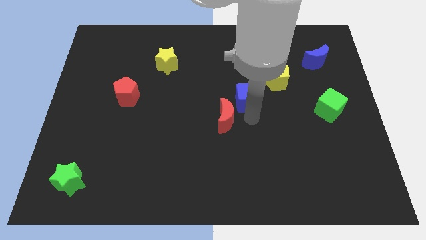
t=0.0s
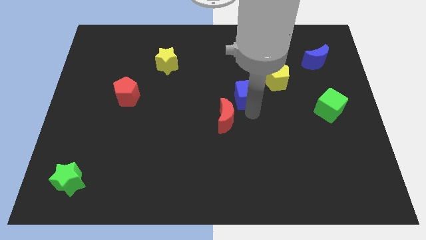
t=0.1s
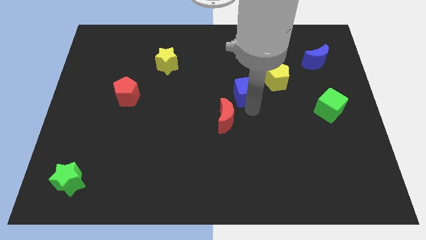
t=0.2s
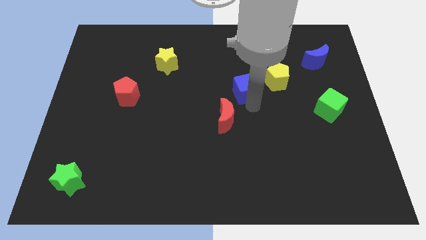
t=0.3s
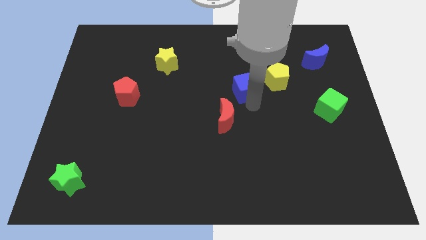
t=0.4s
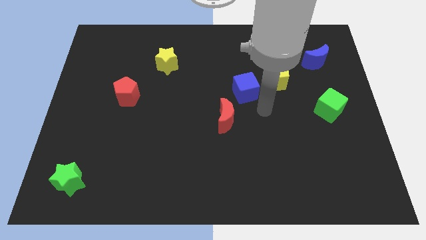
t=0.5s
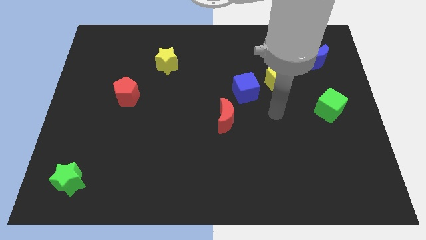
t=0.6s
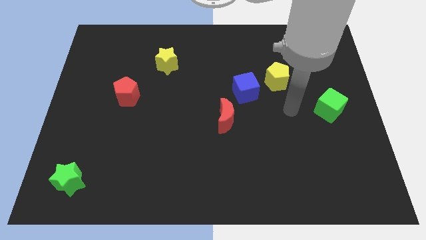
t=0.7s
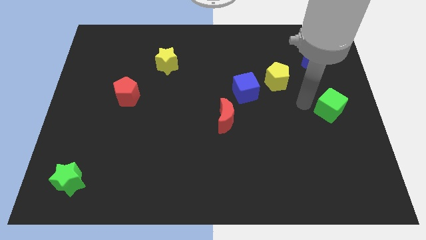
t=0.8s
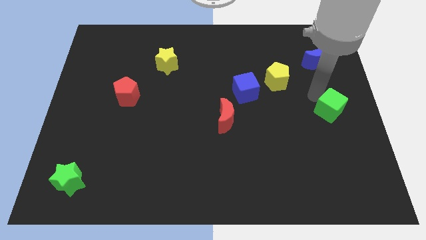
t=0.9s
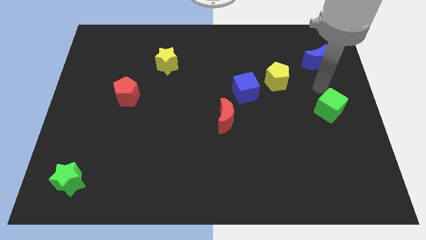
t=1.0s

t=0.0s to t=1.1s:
move blue cubed left beside yellow pentagon

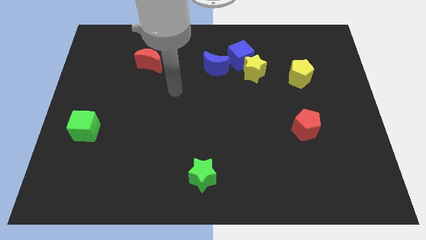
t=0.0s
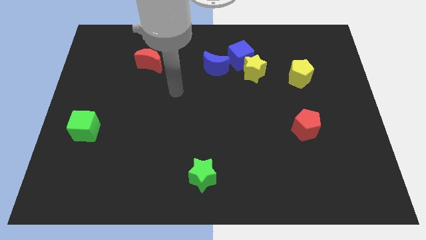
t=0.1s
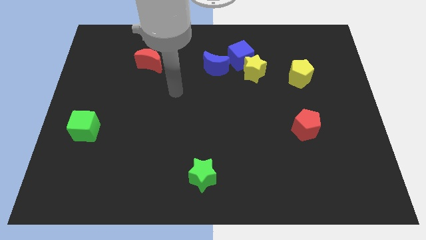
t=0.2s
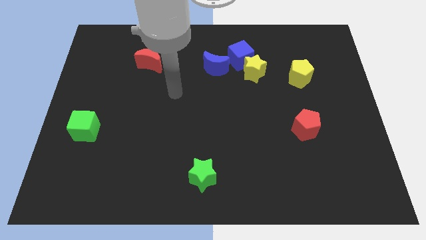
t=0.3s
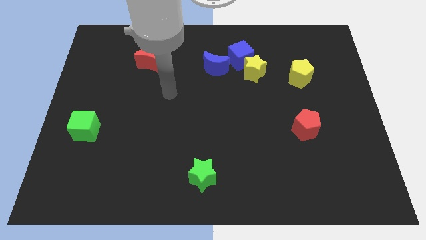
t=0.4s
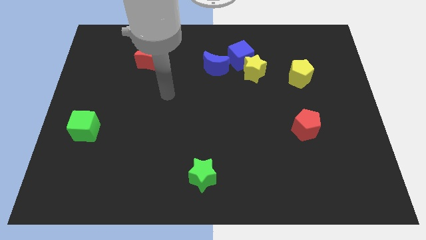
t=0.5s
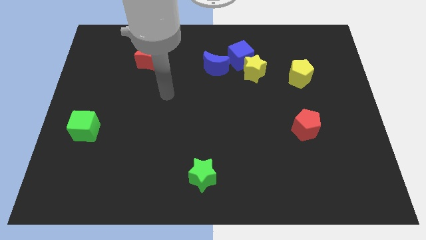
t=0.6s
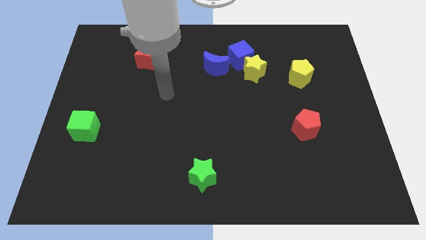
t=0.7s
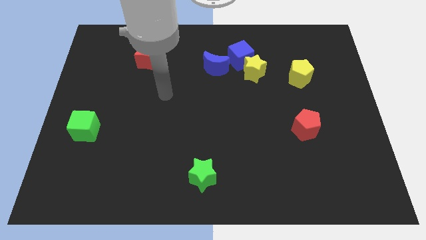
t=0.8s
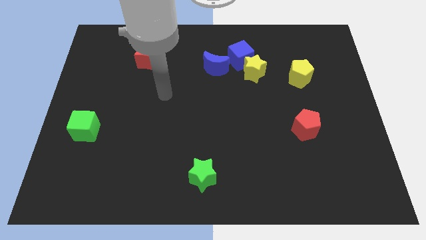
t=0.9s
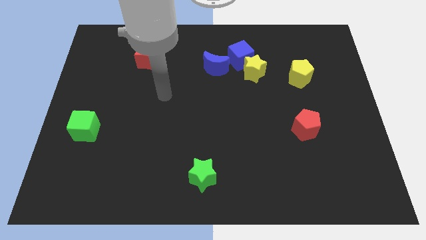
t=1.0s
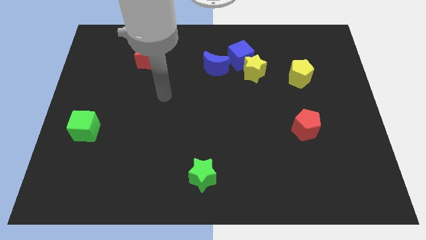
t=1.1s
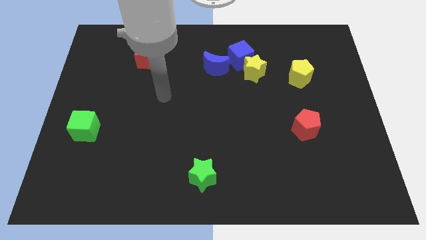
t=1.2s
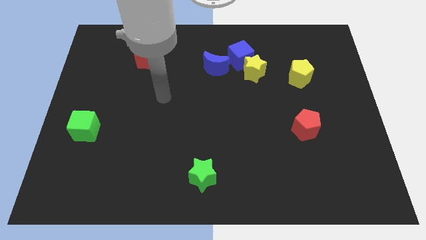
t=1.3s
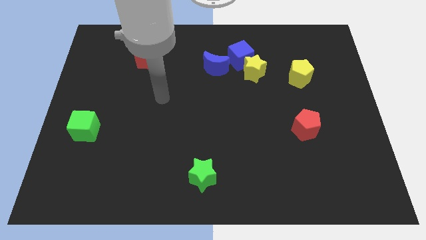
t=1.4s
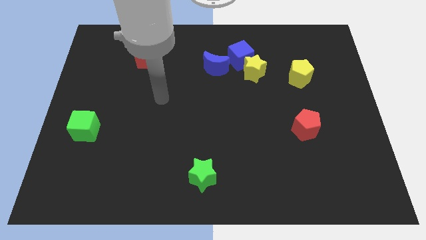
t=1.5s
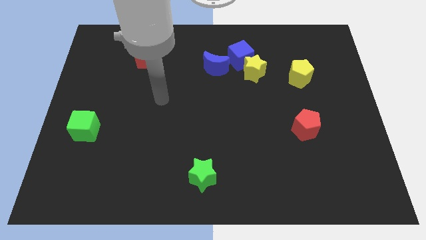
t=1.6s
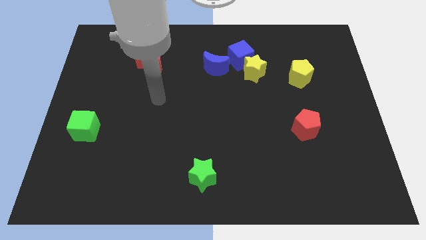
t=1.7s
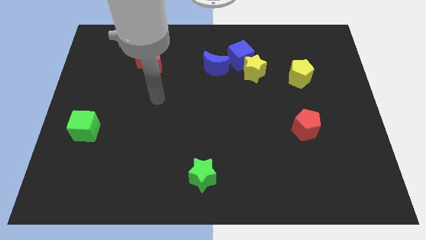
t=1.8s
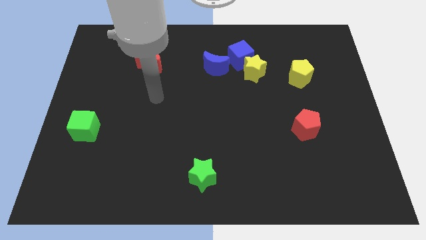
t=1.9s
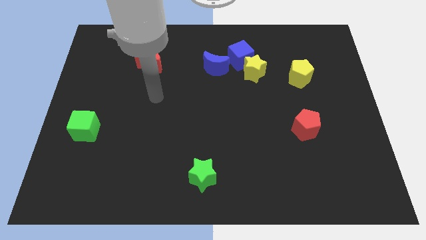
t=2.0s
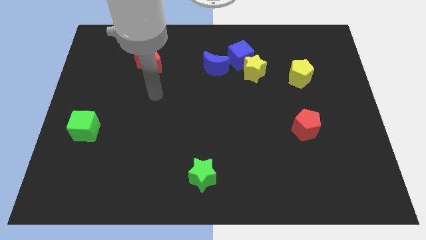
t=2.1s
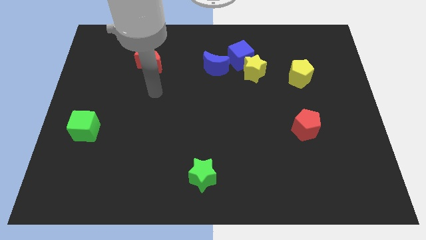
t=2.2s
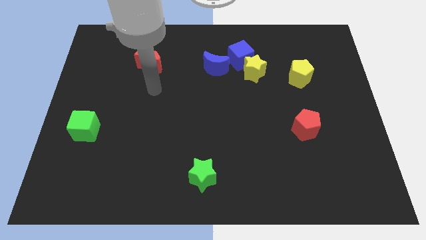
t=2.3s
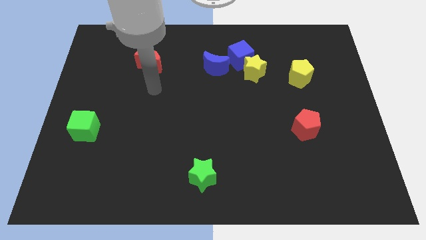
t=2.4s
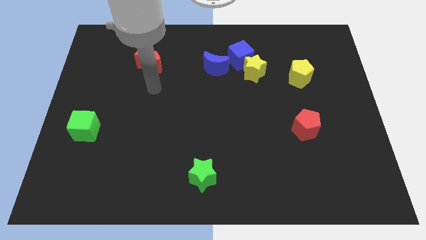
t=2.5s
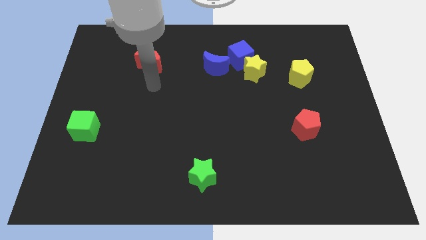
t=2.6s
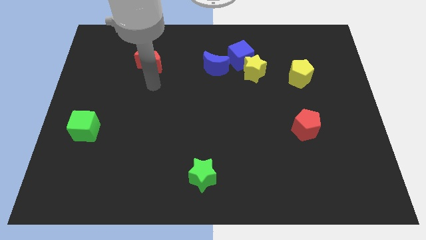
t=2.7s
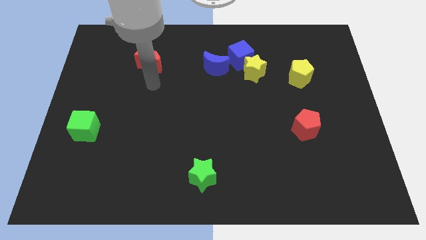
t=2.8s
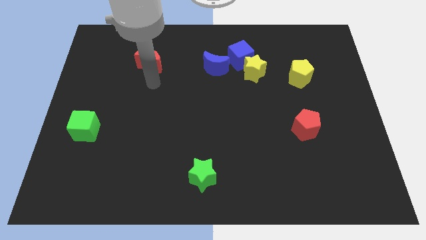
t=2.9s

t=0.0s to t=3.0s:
place arm at the bottom of red moon

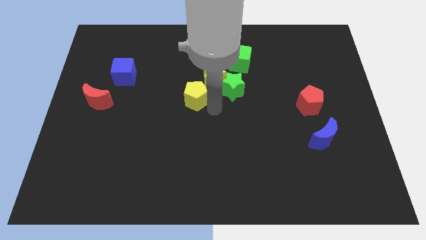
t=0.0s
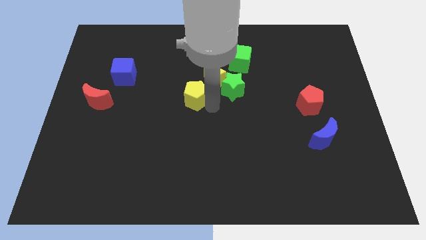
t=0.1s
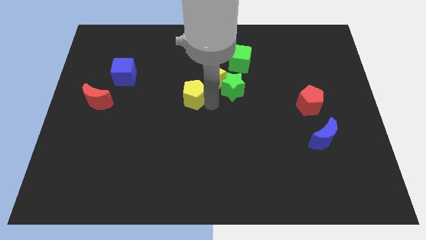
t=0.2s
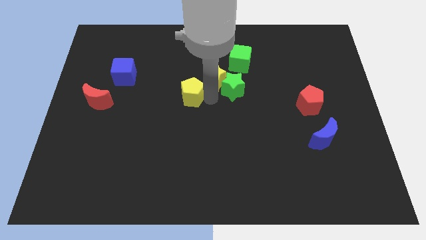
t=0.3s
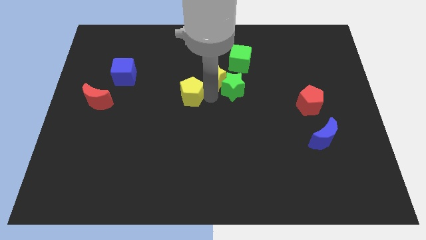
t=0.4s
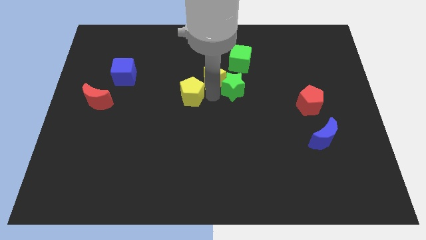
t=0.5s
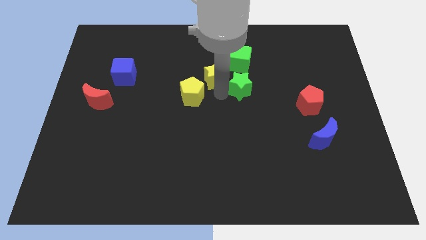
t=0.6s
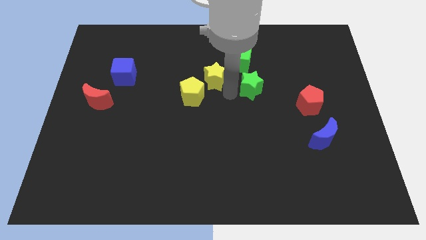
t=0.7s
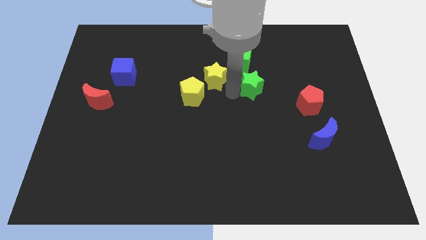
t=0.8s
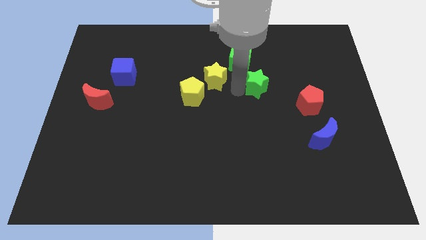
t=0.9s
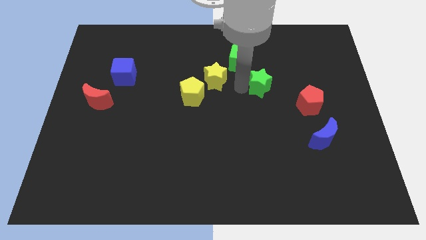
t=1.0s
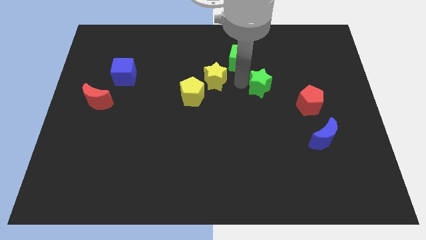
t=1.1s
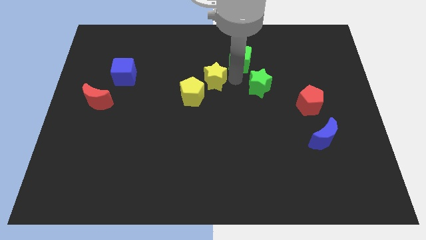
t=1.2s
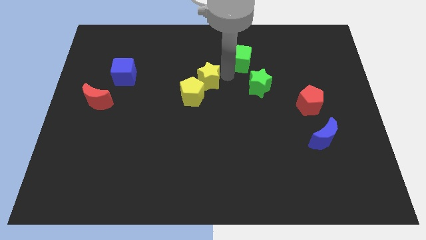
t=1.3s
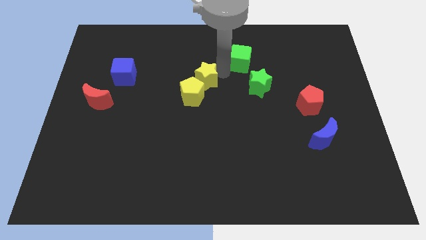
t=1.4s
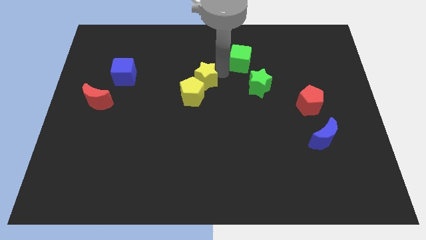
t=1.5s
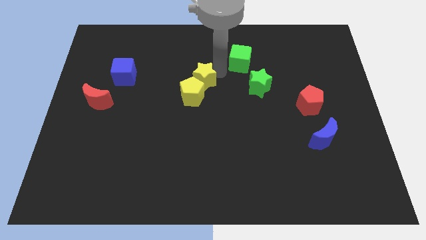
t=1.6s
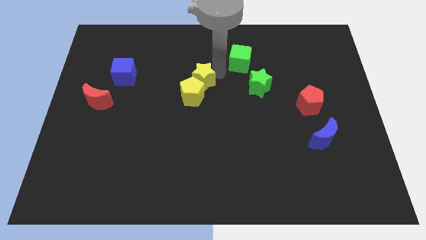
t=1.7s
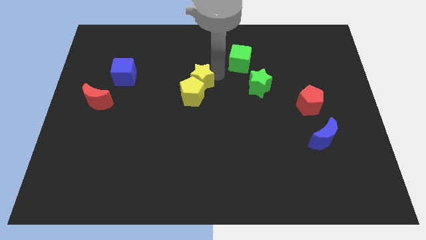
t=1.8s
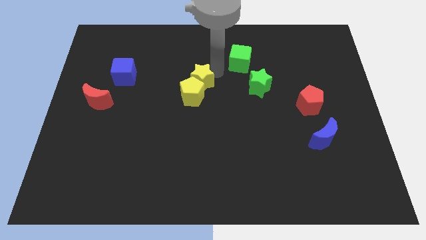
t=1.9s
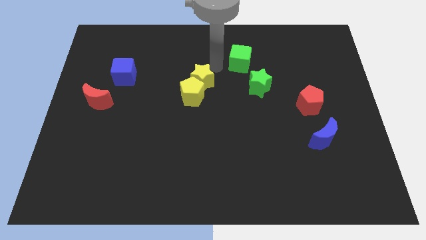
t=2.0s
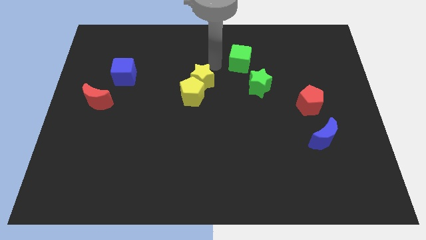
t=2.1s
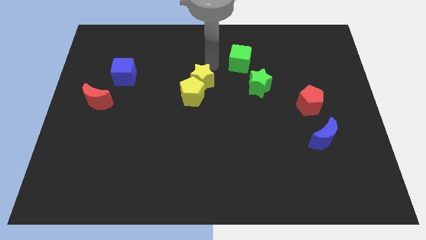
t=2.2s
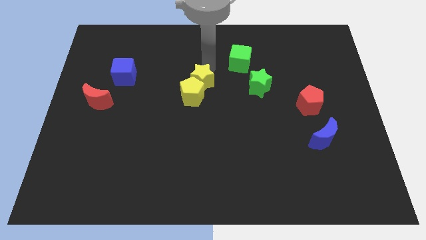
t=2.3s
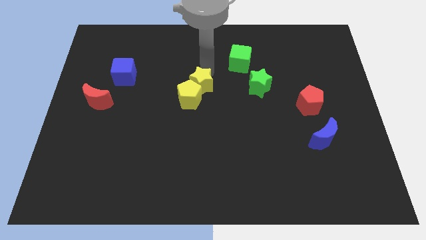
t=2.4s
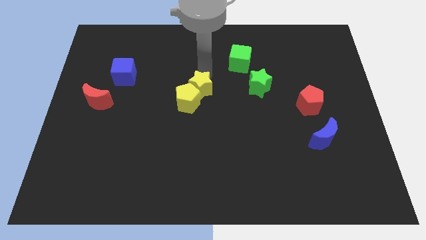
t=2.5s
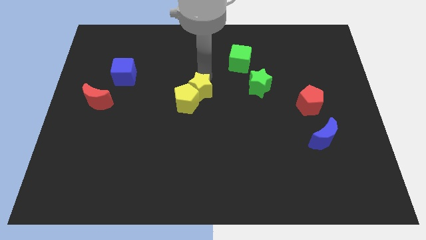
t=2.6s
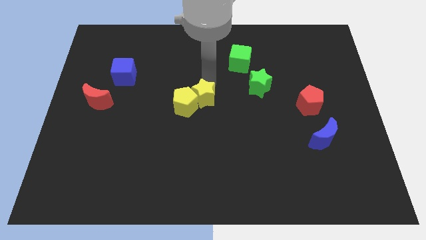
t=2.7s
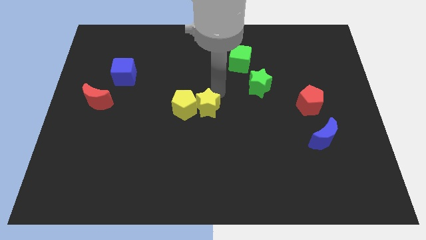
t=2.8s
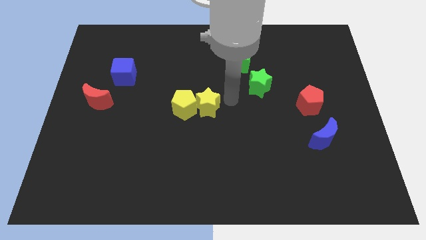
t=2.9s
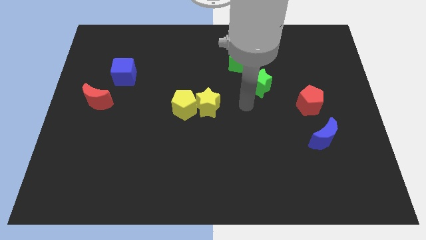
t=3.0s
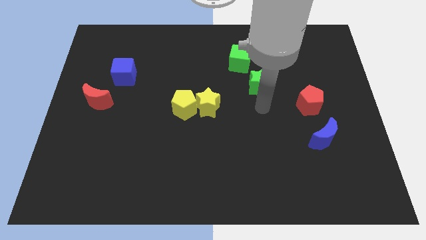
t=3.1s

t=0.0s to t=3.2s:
separate the green star and yellow star by placing the yellow star at the right side of the yellow pentagon

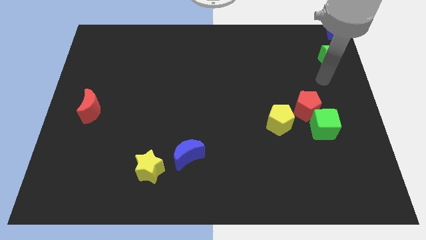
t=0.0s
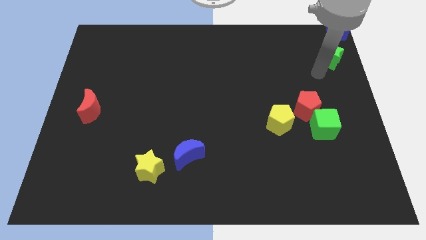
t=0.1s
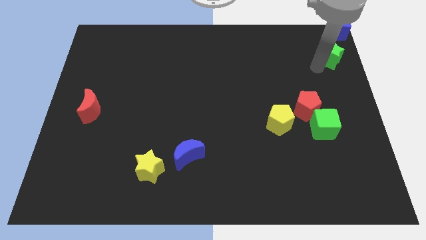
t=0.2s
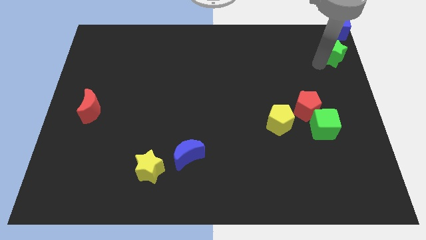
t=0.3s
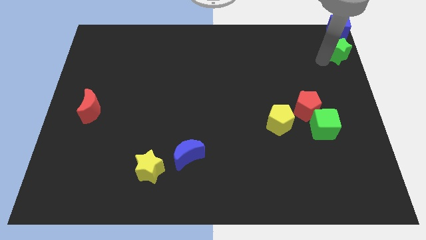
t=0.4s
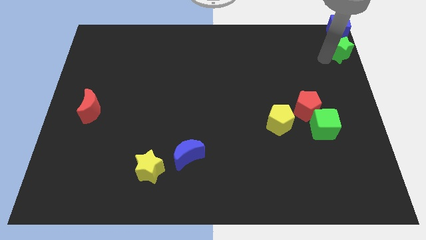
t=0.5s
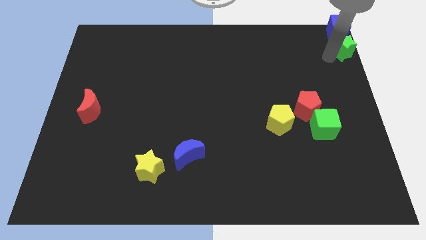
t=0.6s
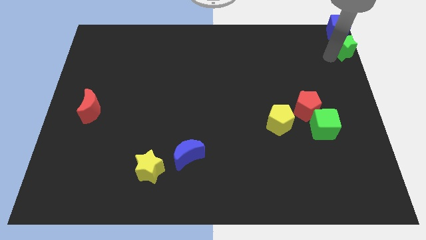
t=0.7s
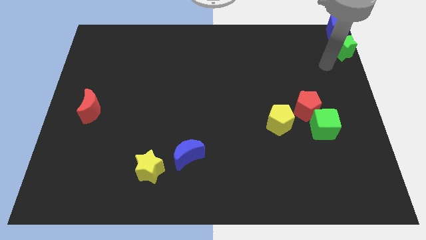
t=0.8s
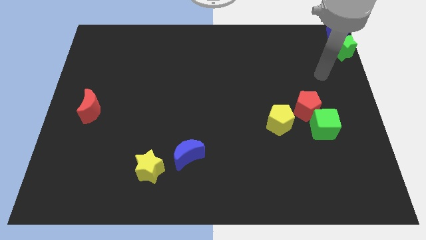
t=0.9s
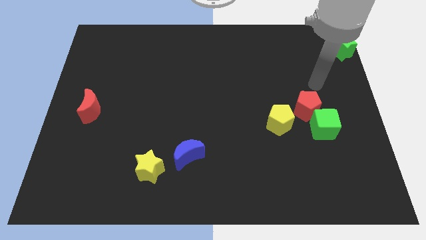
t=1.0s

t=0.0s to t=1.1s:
slide the green star to the bottom of the blue cube

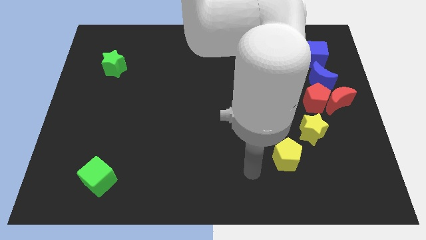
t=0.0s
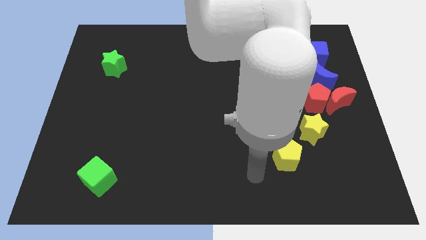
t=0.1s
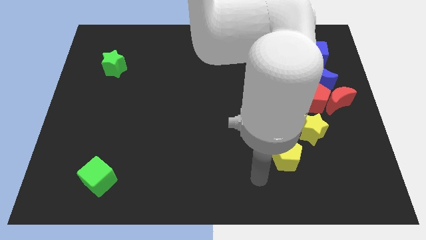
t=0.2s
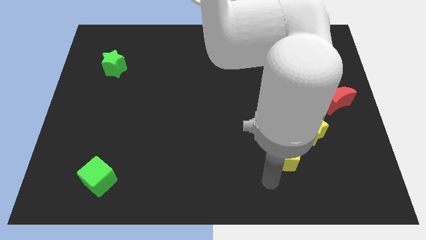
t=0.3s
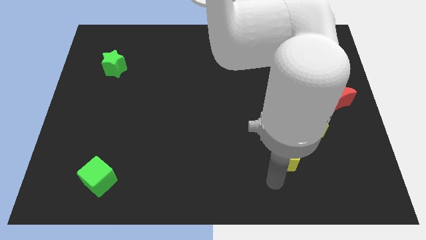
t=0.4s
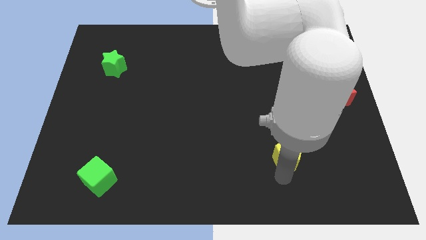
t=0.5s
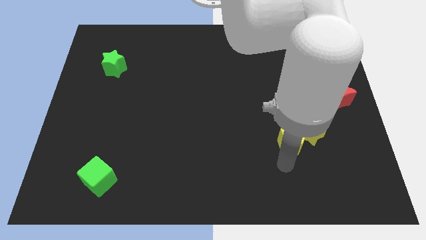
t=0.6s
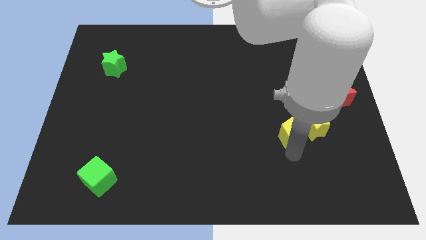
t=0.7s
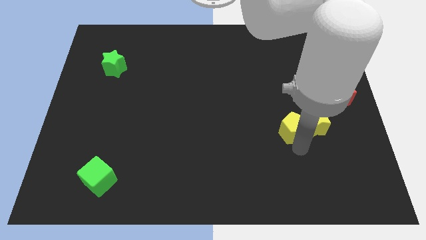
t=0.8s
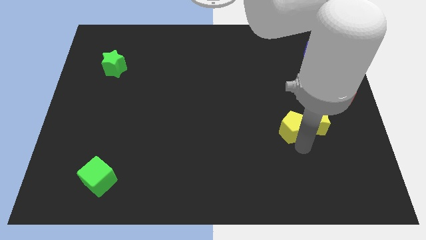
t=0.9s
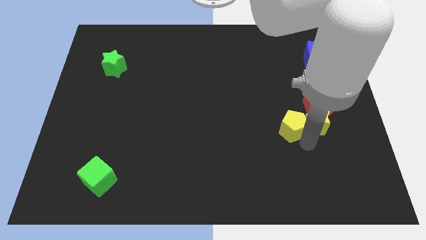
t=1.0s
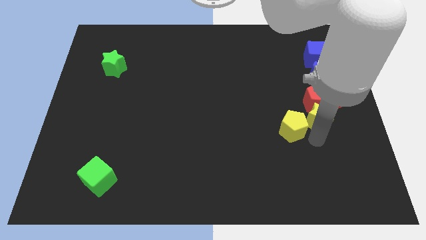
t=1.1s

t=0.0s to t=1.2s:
move the yellow pentagon to the bottom left of the yellow star
